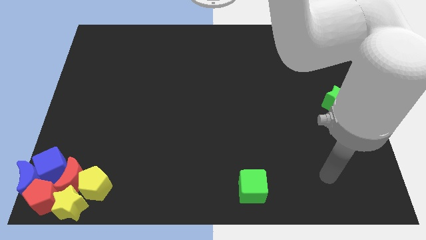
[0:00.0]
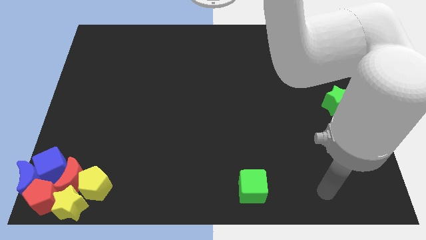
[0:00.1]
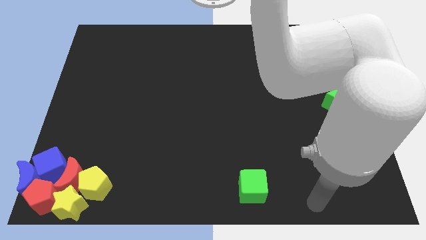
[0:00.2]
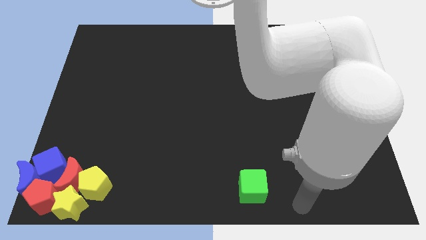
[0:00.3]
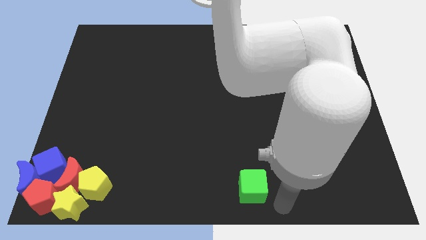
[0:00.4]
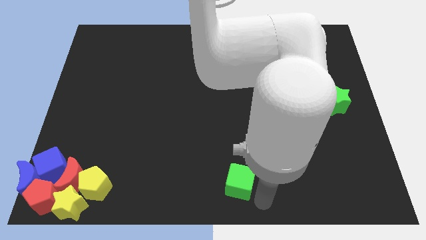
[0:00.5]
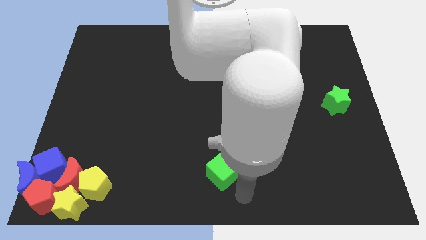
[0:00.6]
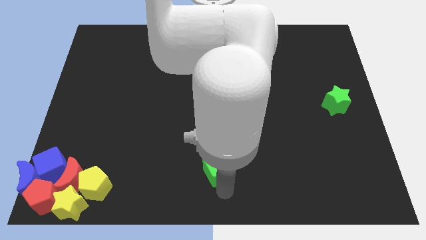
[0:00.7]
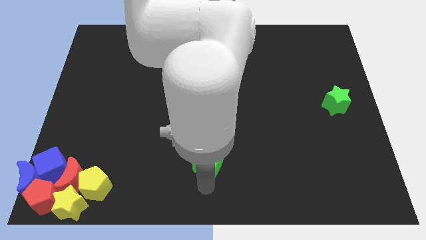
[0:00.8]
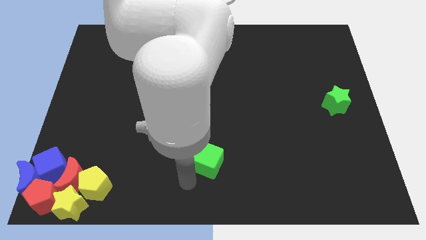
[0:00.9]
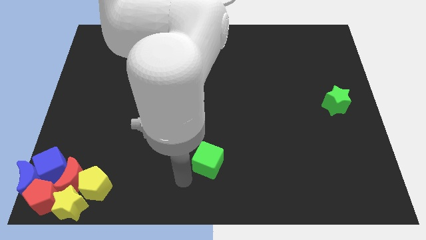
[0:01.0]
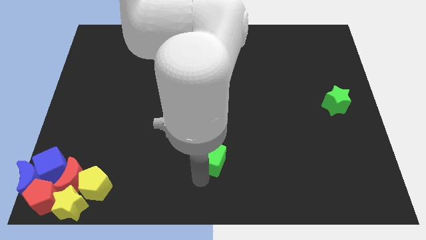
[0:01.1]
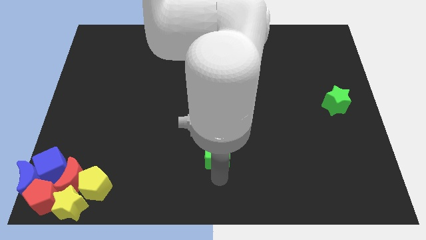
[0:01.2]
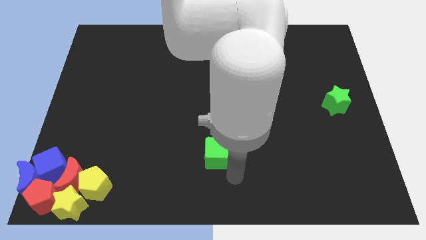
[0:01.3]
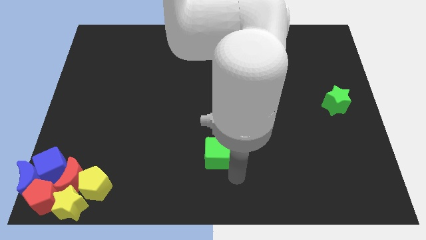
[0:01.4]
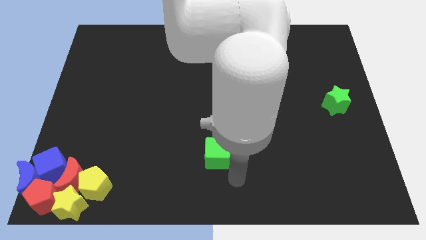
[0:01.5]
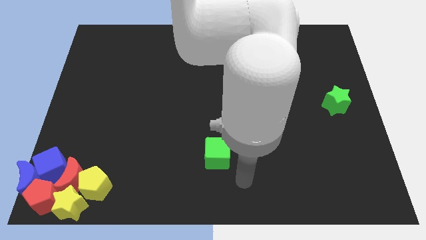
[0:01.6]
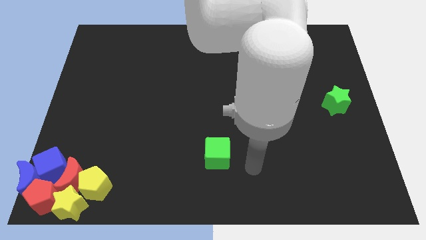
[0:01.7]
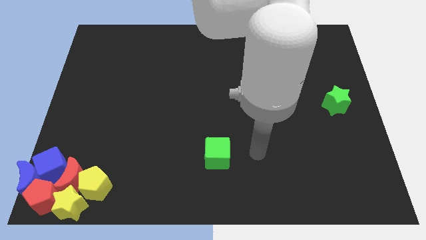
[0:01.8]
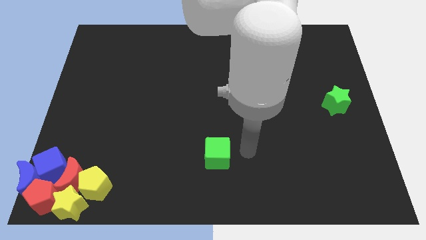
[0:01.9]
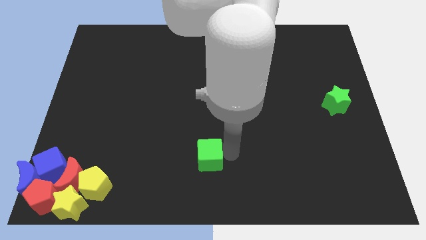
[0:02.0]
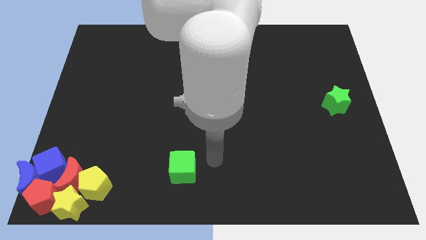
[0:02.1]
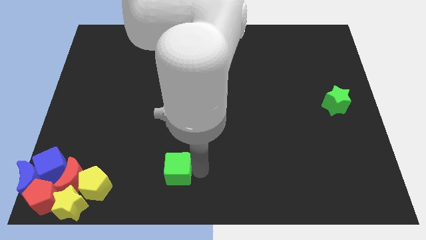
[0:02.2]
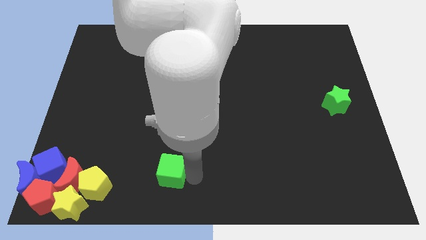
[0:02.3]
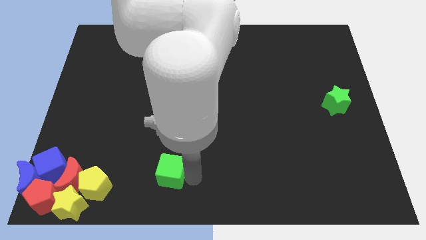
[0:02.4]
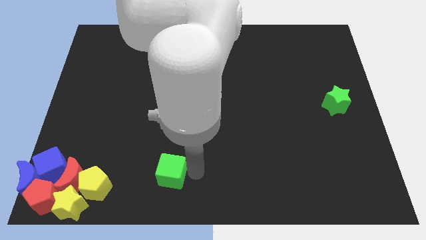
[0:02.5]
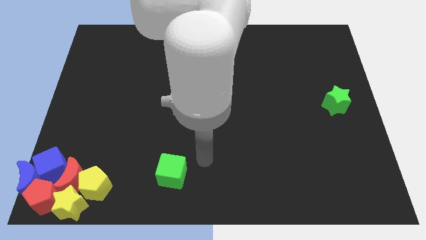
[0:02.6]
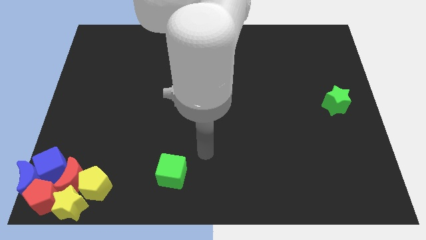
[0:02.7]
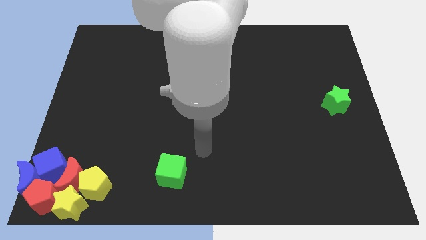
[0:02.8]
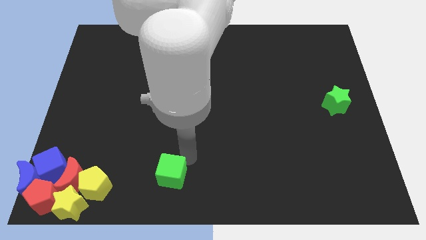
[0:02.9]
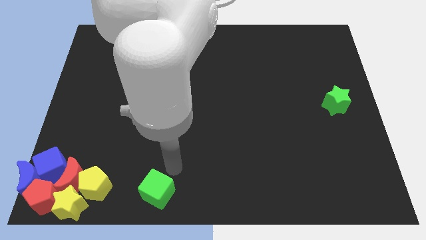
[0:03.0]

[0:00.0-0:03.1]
slide the green cube to the right of the yellow pentagon

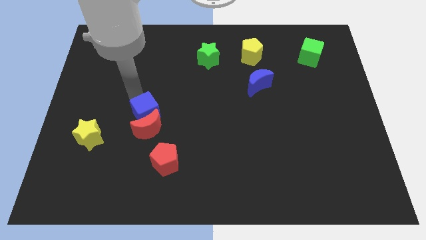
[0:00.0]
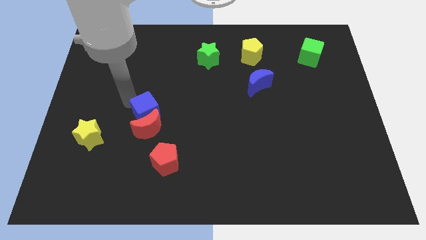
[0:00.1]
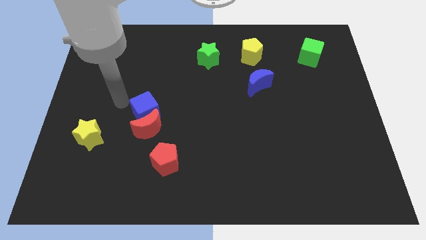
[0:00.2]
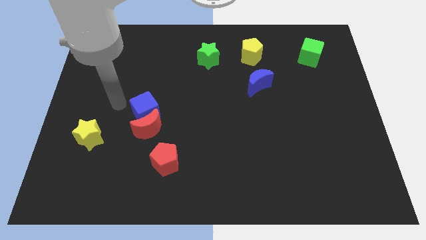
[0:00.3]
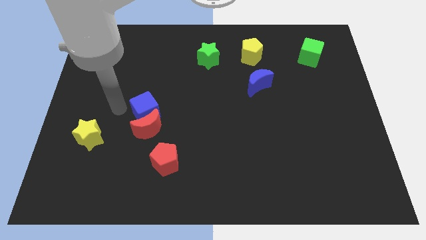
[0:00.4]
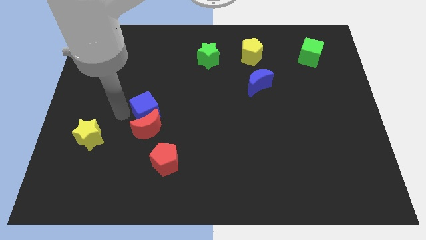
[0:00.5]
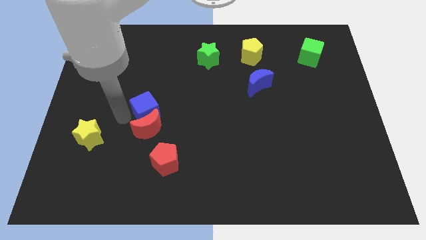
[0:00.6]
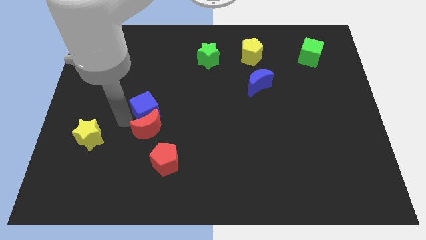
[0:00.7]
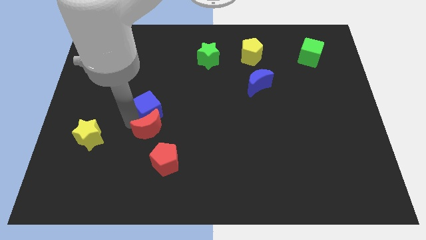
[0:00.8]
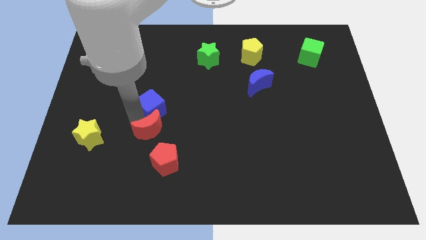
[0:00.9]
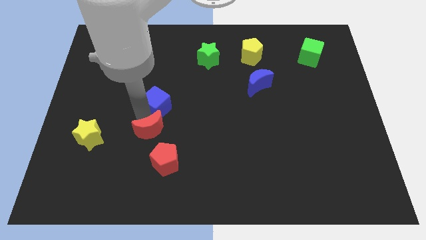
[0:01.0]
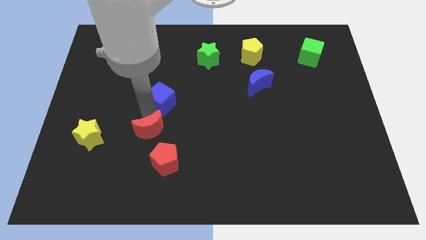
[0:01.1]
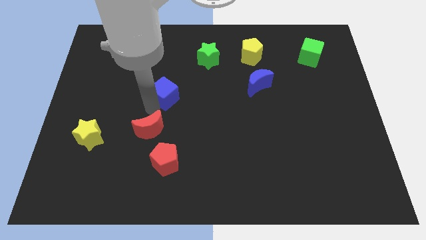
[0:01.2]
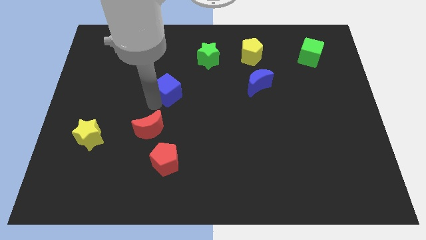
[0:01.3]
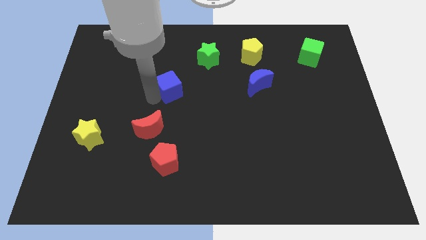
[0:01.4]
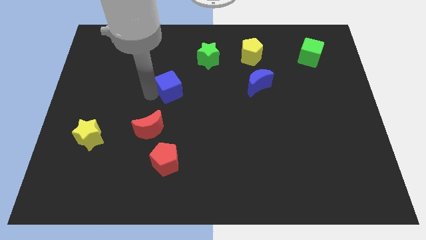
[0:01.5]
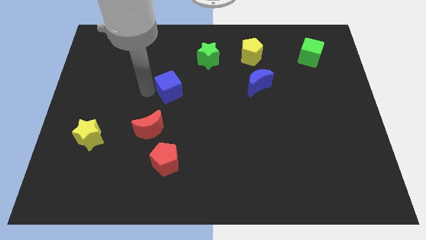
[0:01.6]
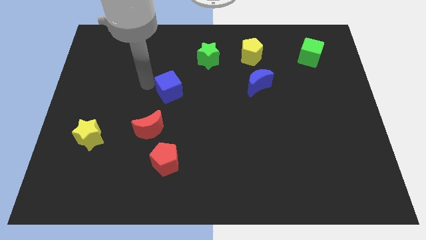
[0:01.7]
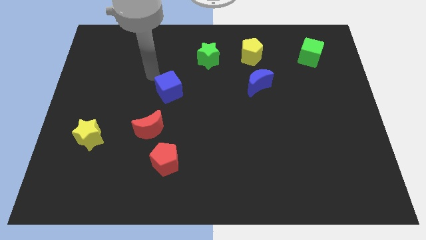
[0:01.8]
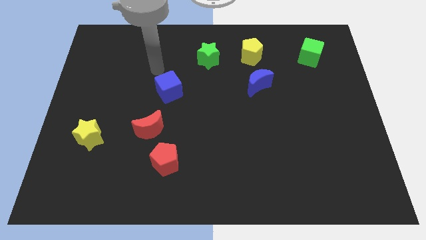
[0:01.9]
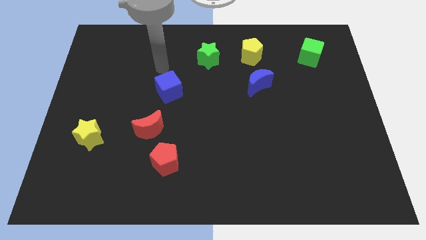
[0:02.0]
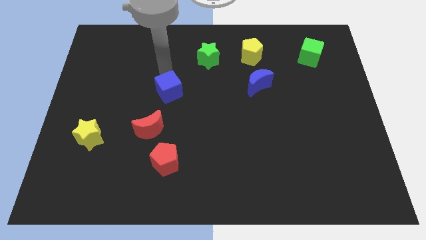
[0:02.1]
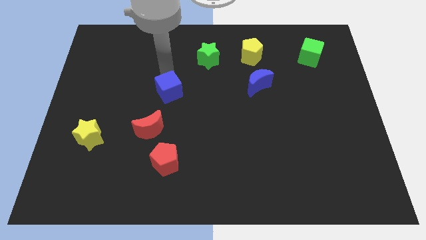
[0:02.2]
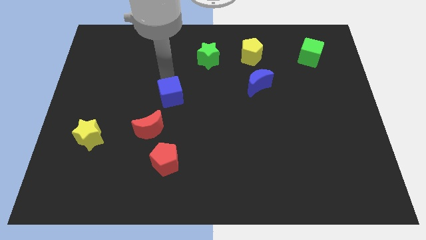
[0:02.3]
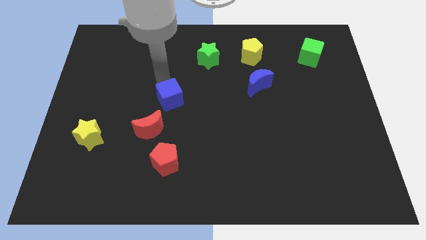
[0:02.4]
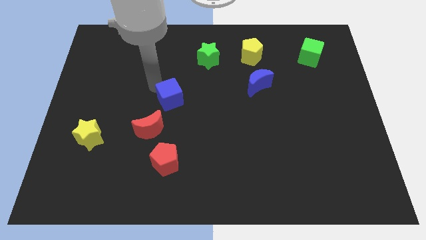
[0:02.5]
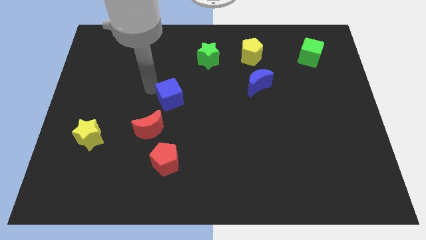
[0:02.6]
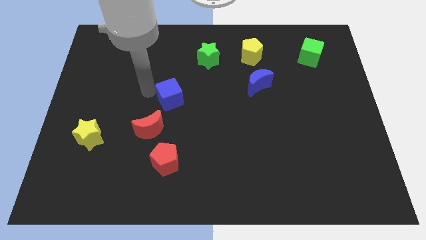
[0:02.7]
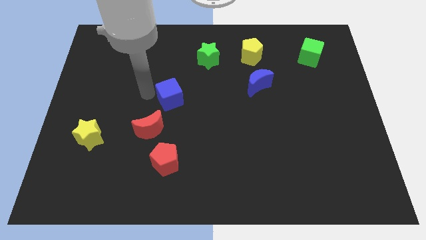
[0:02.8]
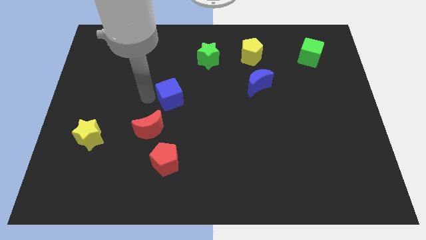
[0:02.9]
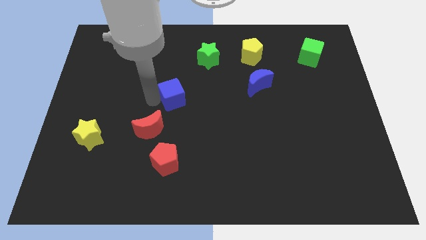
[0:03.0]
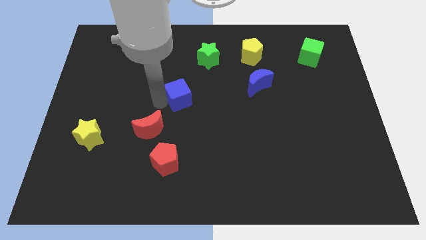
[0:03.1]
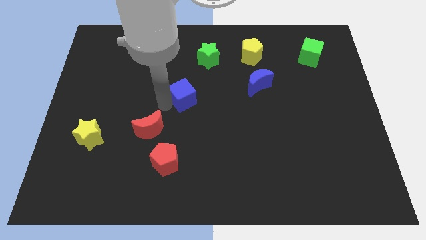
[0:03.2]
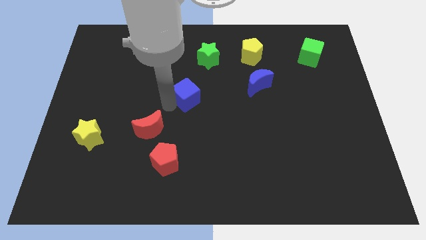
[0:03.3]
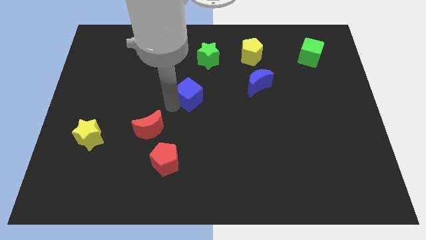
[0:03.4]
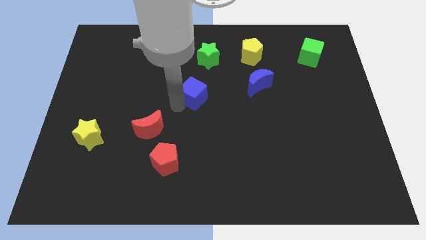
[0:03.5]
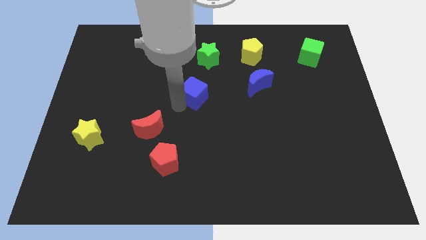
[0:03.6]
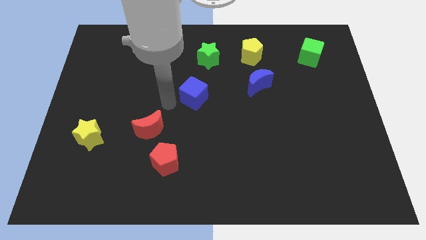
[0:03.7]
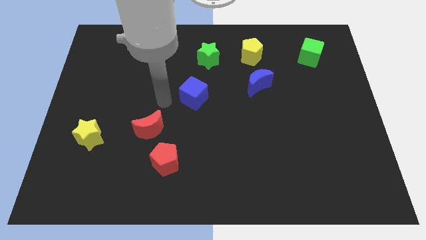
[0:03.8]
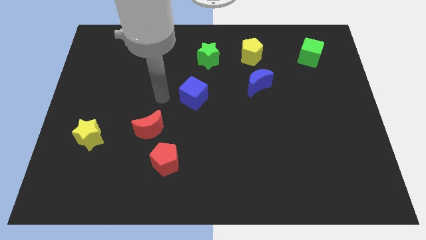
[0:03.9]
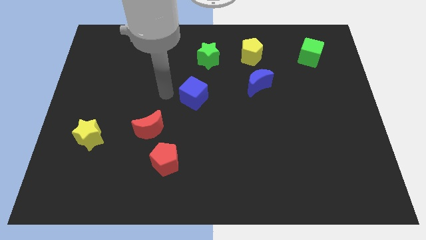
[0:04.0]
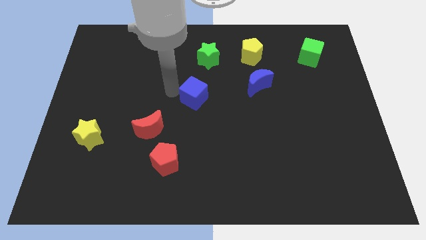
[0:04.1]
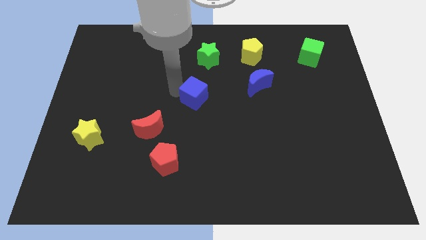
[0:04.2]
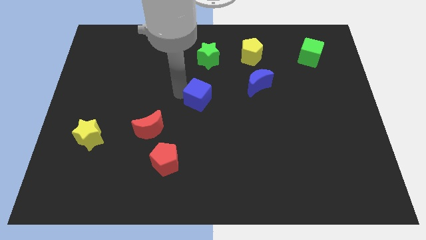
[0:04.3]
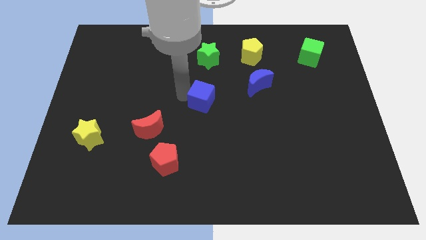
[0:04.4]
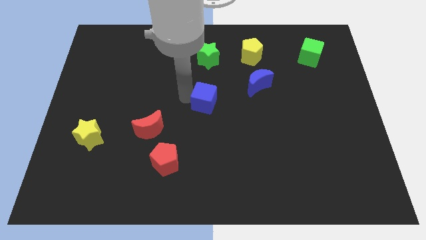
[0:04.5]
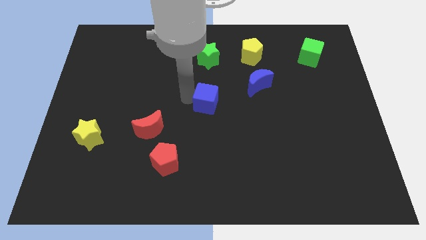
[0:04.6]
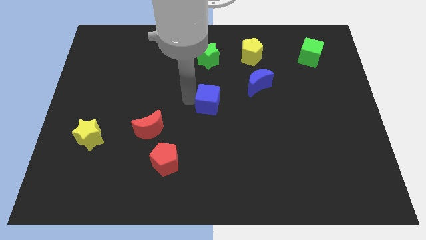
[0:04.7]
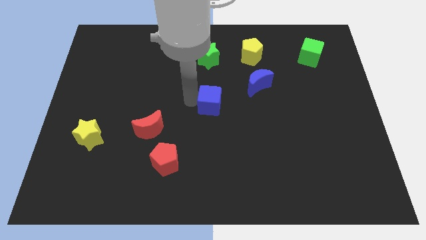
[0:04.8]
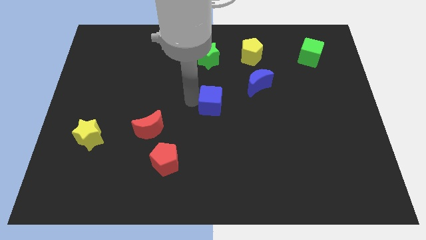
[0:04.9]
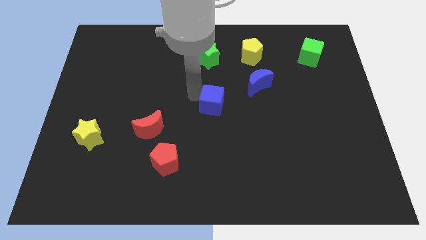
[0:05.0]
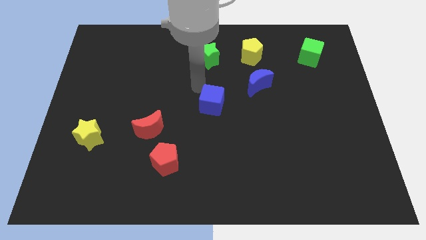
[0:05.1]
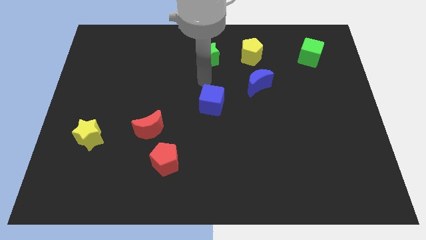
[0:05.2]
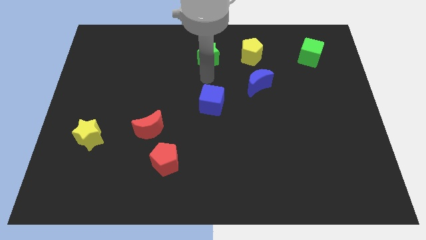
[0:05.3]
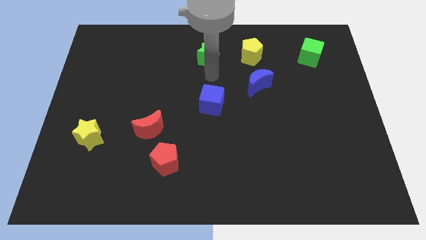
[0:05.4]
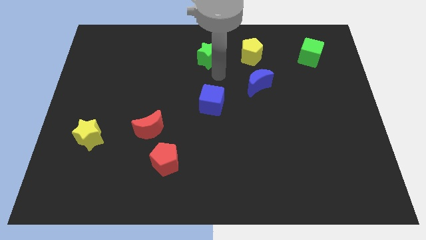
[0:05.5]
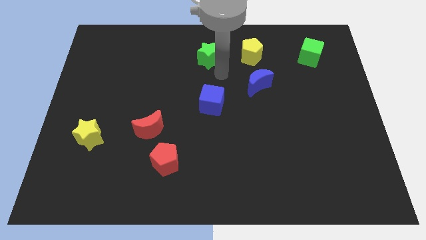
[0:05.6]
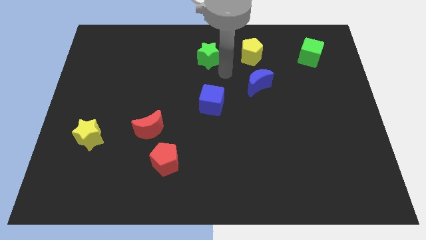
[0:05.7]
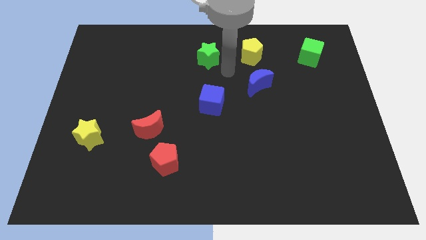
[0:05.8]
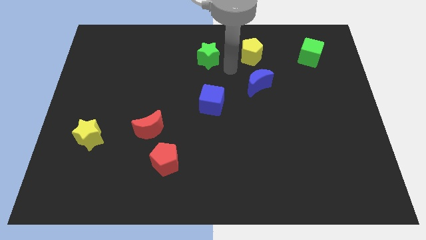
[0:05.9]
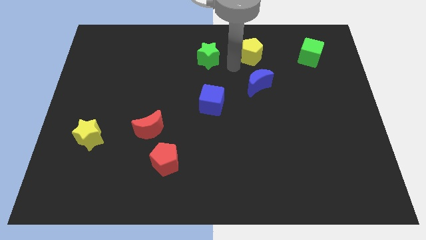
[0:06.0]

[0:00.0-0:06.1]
push the blue cube to the center of the board
